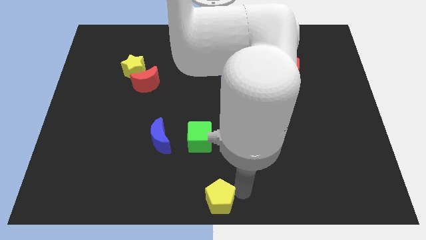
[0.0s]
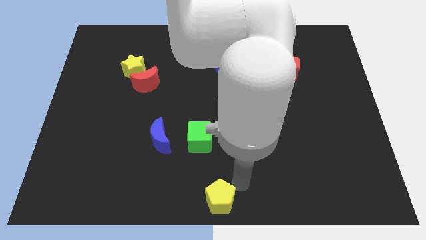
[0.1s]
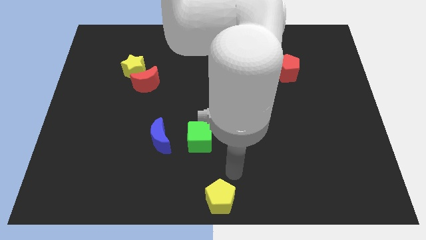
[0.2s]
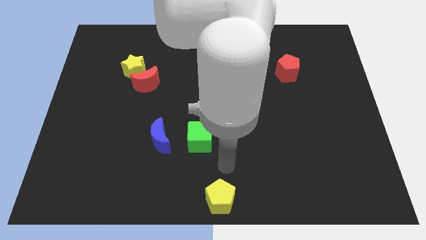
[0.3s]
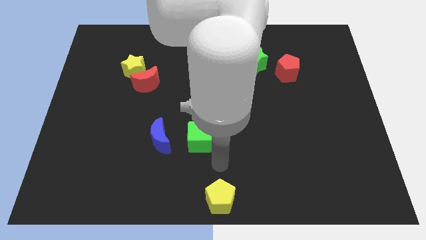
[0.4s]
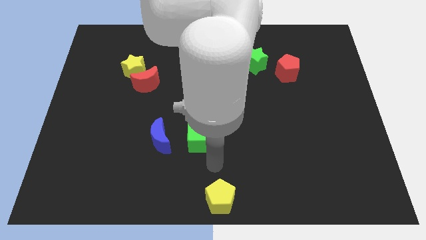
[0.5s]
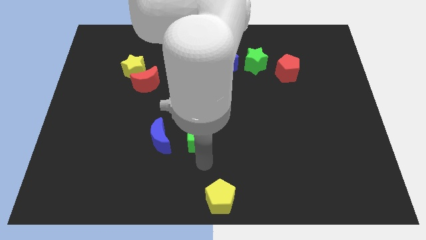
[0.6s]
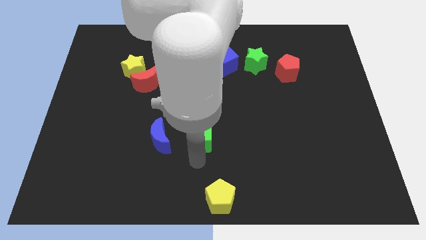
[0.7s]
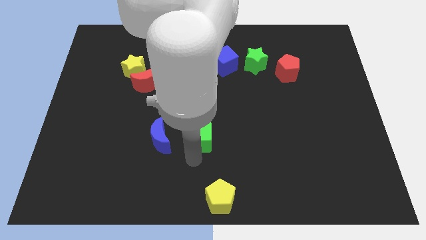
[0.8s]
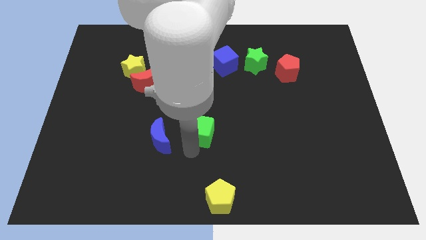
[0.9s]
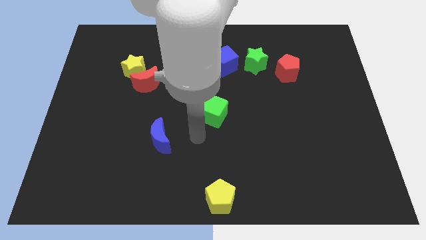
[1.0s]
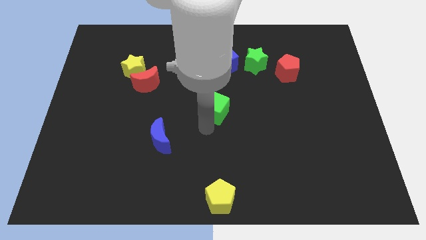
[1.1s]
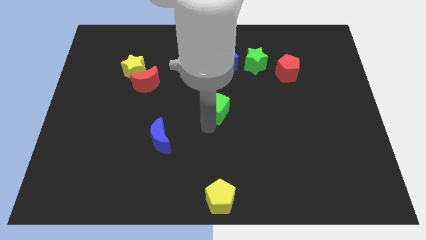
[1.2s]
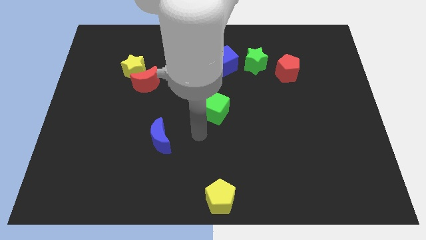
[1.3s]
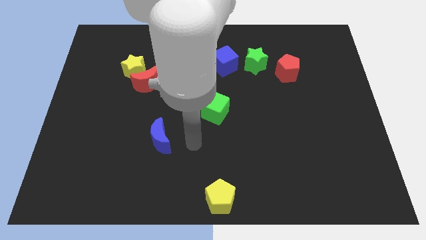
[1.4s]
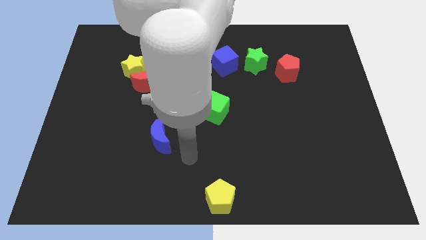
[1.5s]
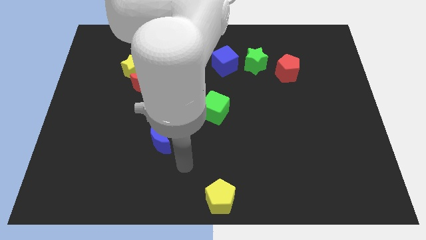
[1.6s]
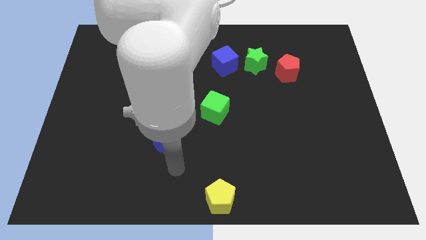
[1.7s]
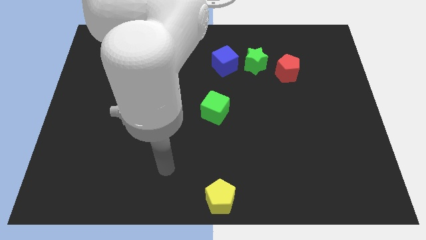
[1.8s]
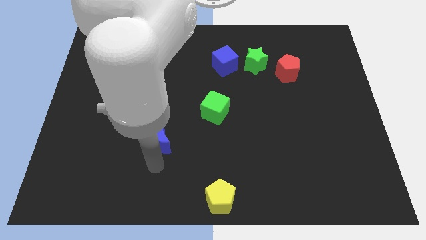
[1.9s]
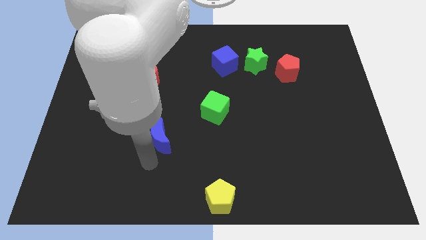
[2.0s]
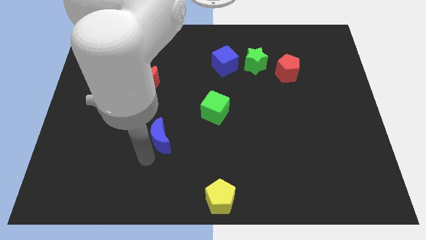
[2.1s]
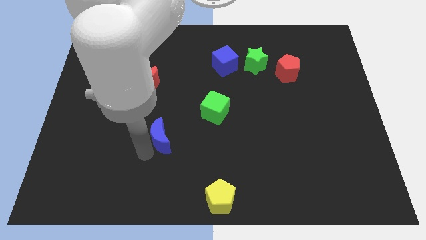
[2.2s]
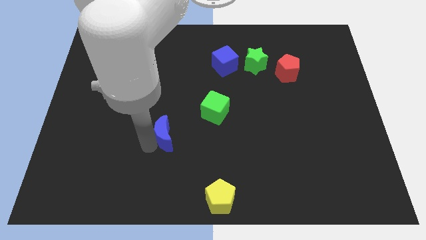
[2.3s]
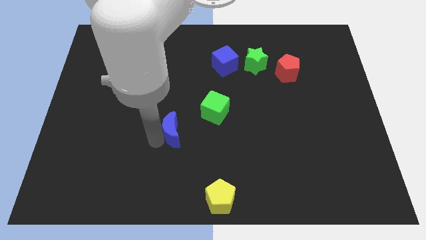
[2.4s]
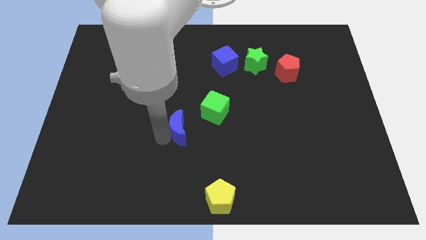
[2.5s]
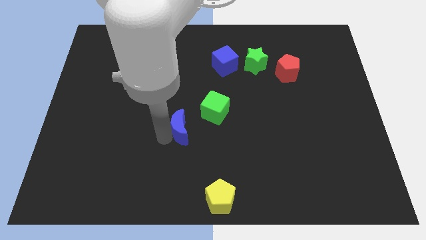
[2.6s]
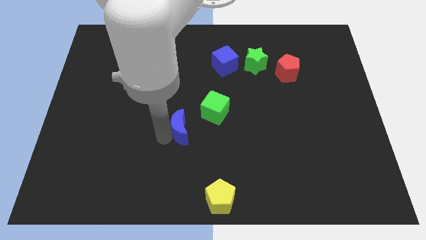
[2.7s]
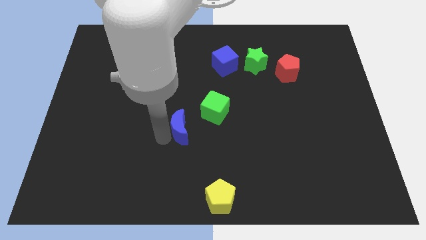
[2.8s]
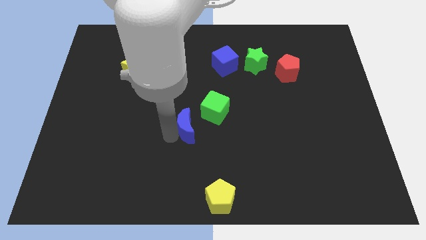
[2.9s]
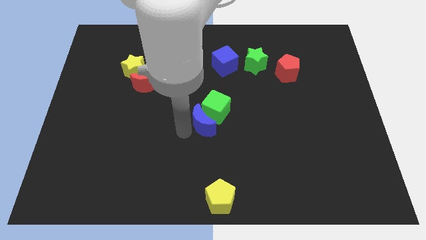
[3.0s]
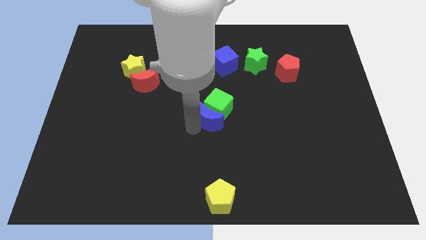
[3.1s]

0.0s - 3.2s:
place the green cube and blue moon above the yellow pentagon

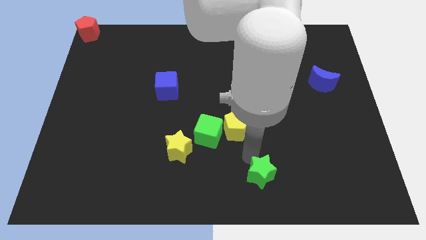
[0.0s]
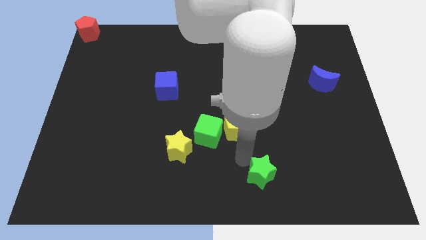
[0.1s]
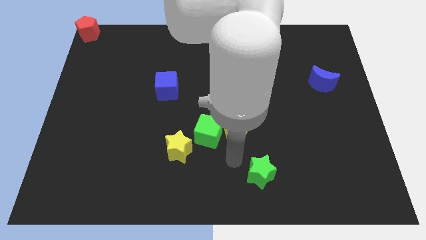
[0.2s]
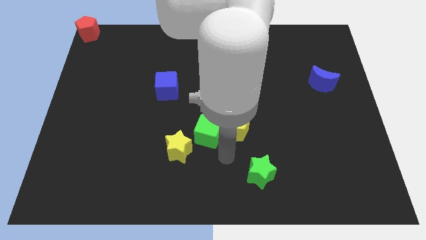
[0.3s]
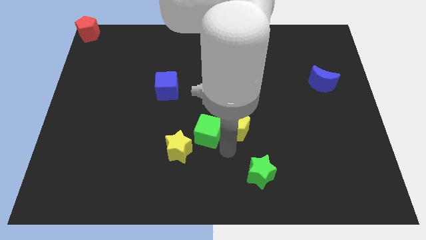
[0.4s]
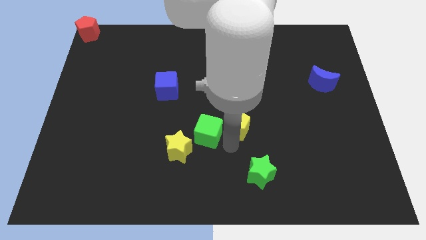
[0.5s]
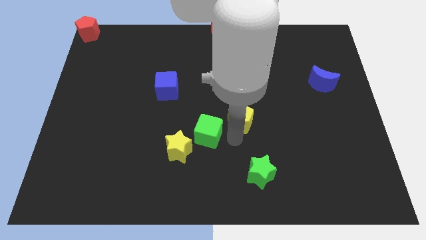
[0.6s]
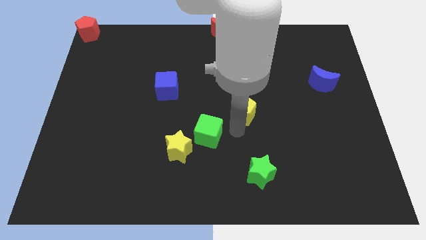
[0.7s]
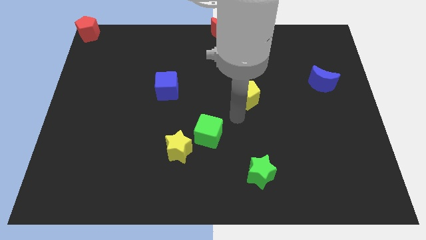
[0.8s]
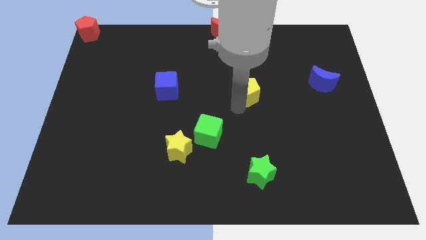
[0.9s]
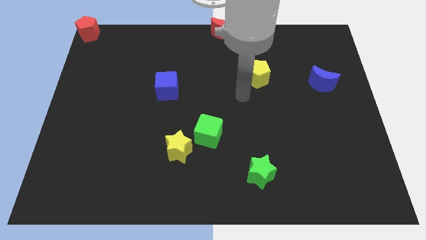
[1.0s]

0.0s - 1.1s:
move the yellow pentagon parallel to the left of the blue crescent

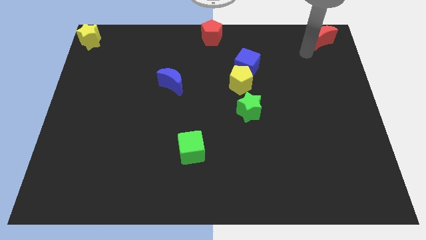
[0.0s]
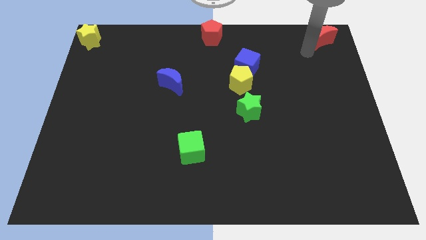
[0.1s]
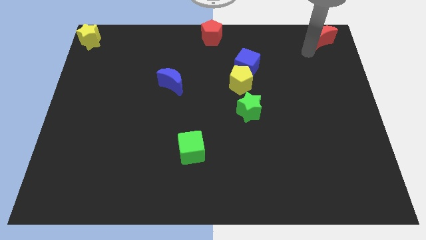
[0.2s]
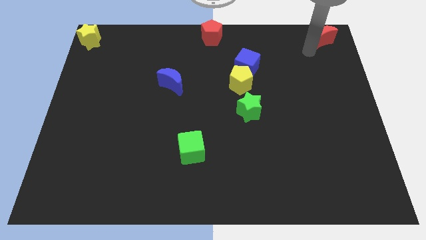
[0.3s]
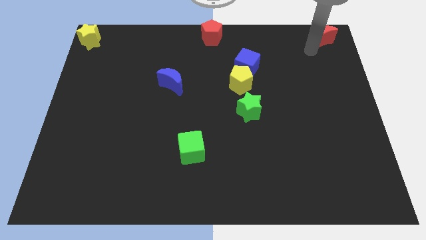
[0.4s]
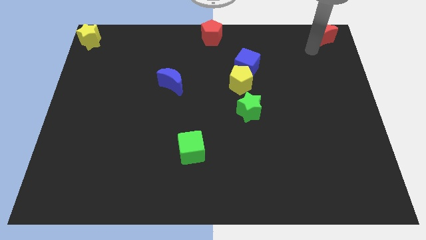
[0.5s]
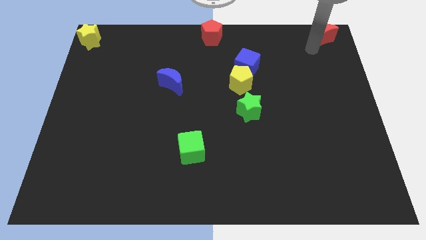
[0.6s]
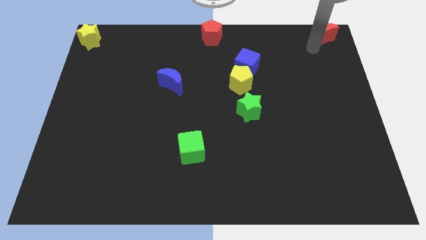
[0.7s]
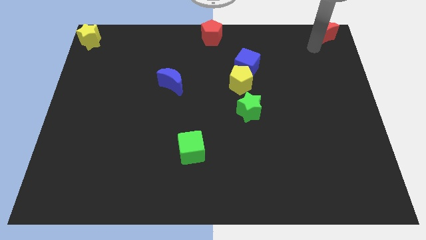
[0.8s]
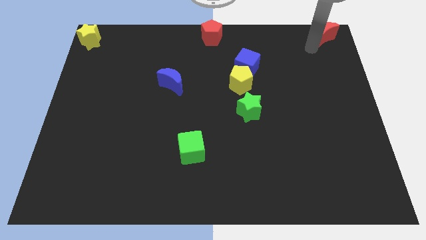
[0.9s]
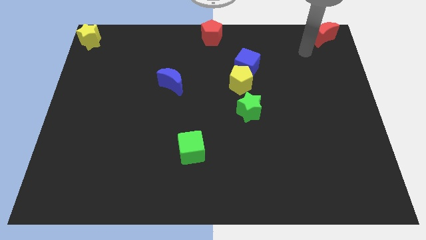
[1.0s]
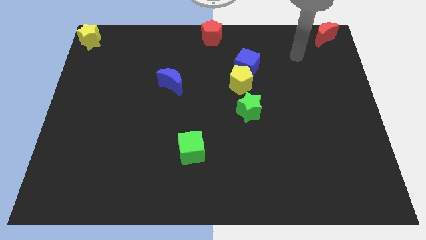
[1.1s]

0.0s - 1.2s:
move the red crescent to the top right corner

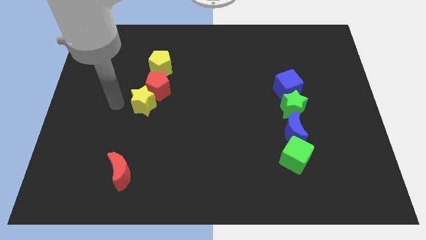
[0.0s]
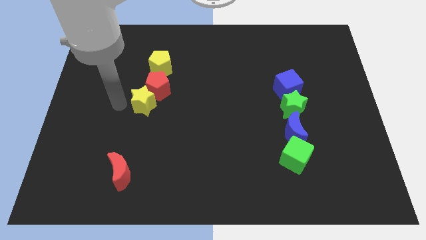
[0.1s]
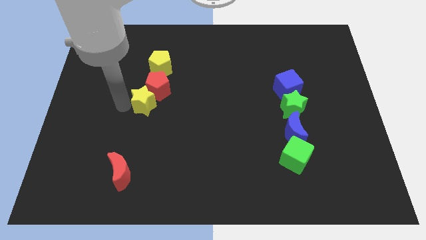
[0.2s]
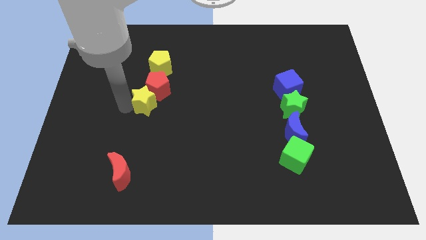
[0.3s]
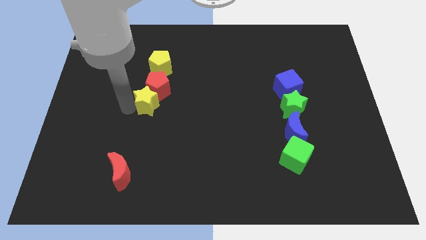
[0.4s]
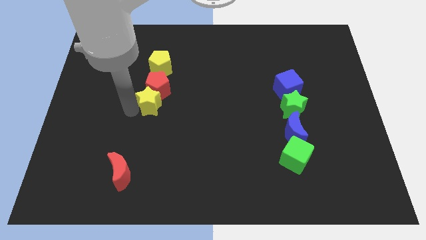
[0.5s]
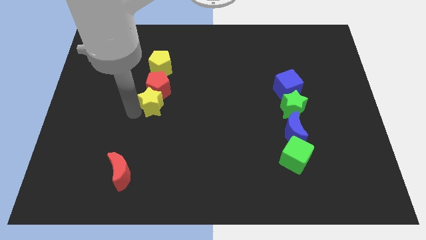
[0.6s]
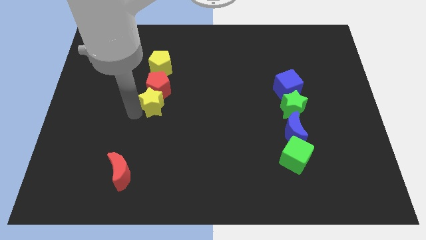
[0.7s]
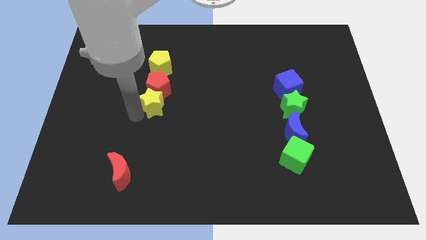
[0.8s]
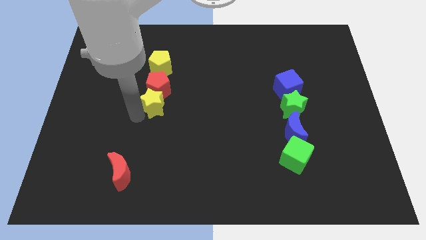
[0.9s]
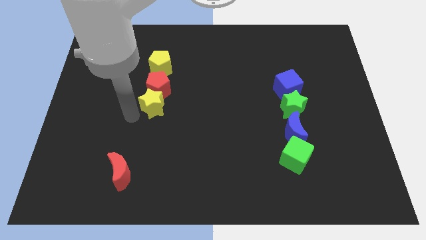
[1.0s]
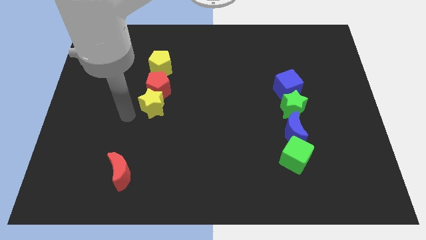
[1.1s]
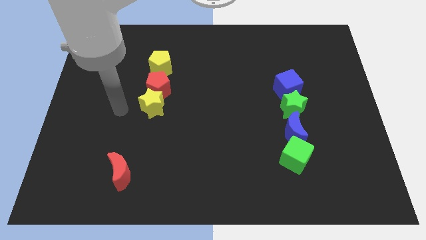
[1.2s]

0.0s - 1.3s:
move yellow star below the red pentagon

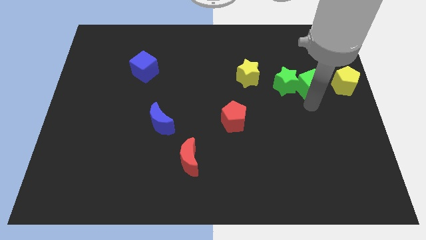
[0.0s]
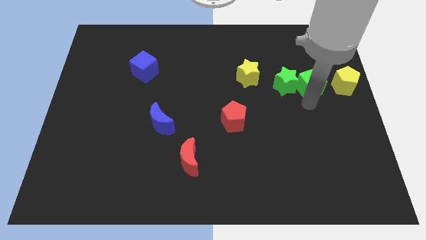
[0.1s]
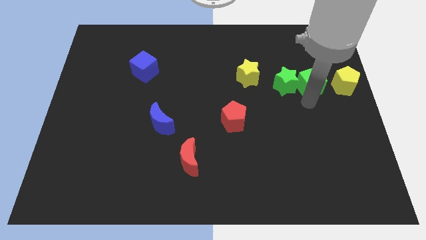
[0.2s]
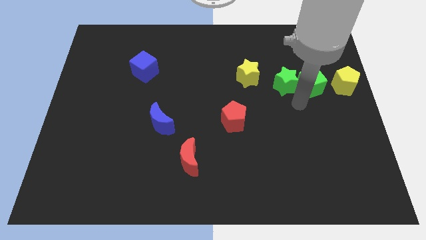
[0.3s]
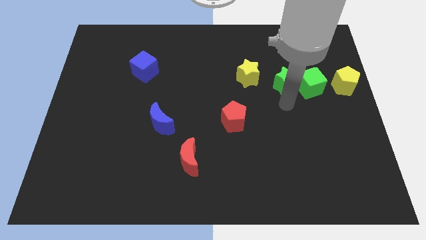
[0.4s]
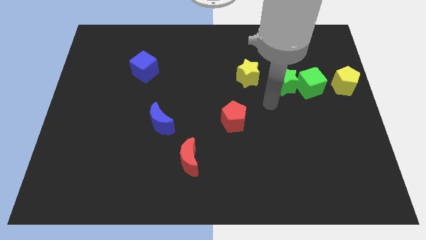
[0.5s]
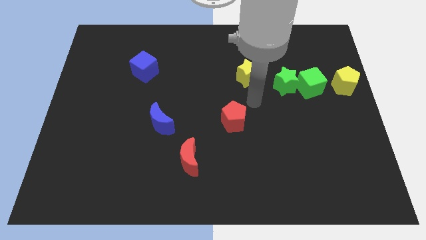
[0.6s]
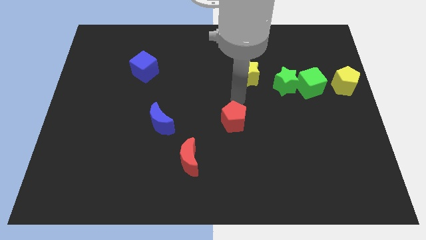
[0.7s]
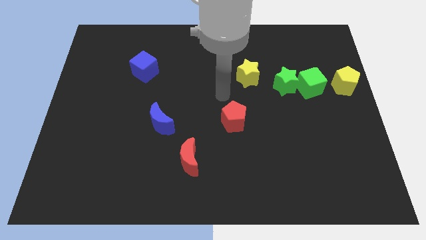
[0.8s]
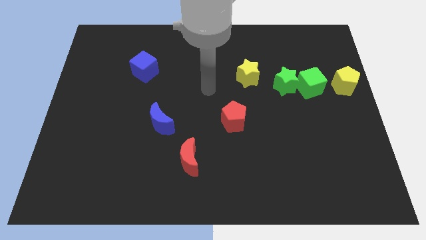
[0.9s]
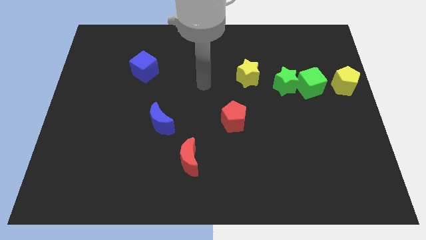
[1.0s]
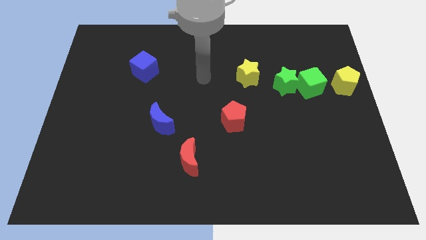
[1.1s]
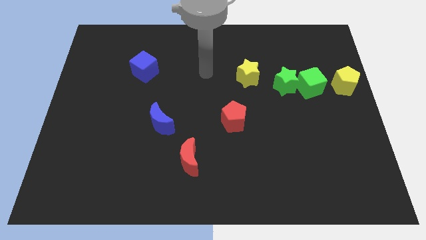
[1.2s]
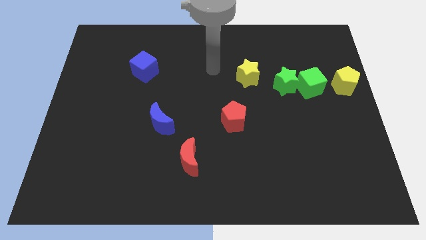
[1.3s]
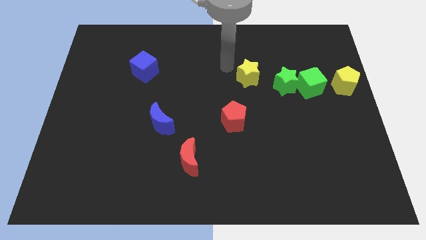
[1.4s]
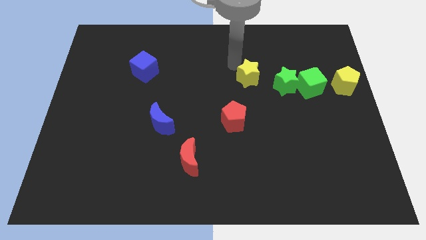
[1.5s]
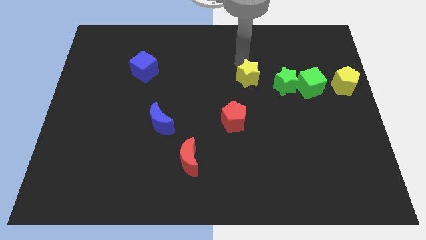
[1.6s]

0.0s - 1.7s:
go near yellow pentagon

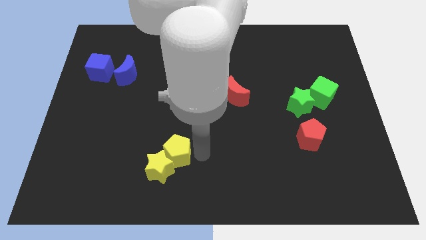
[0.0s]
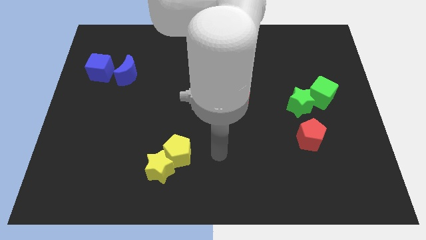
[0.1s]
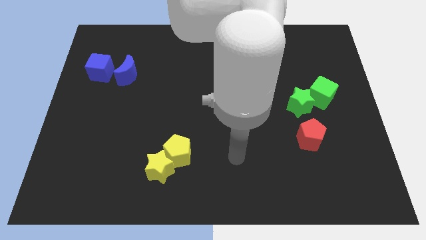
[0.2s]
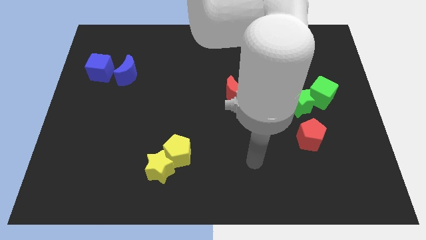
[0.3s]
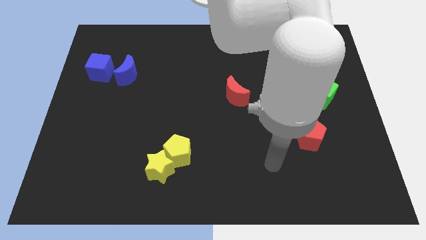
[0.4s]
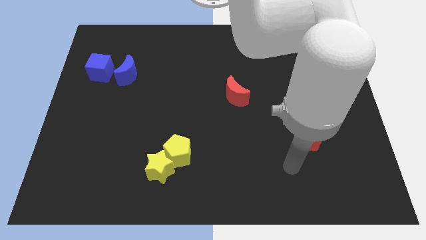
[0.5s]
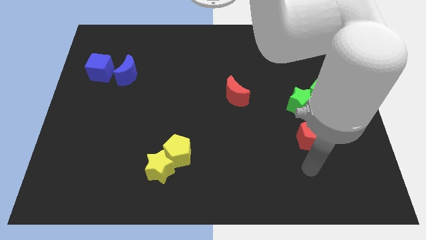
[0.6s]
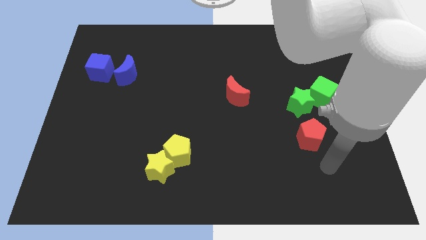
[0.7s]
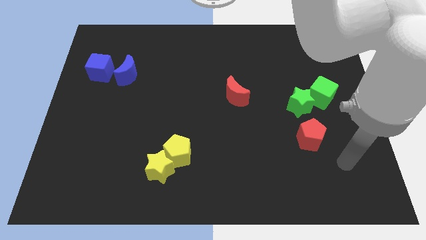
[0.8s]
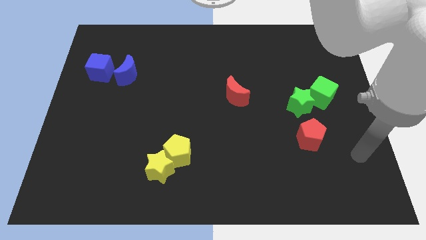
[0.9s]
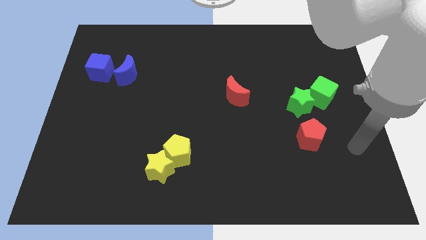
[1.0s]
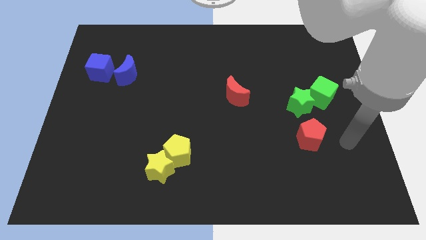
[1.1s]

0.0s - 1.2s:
go away from the yellow pentagon
